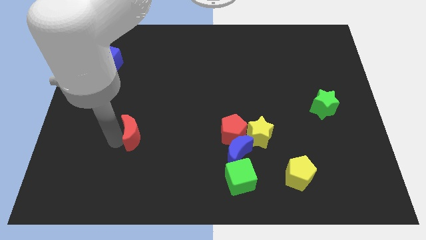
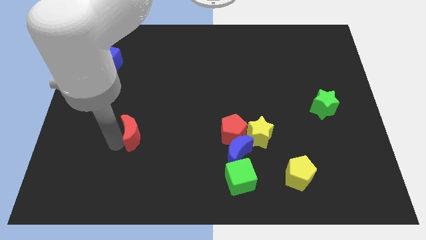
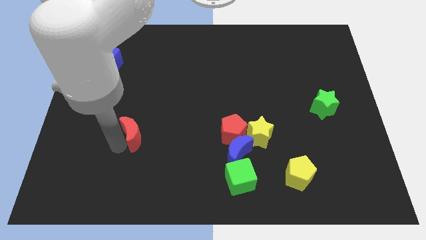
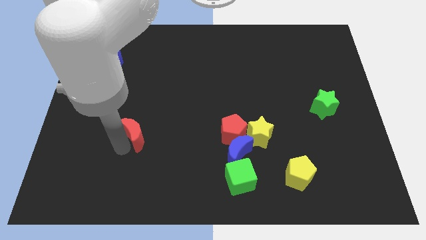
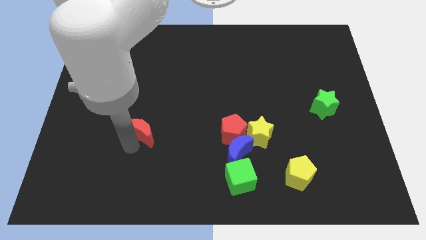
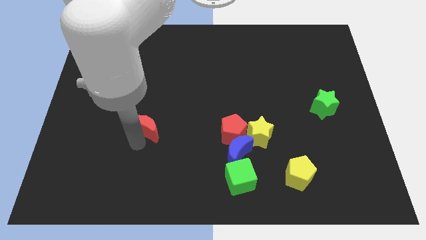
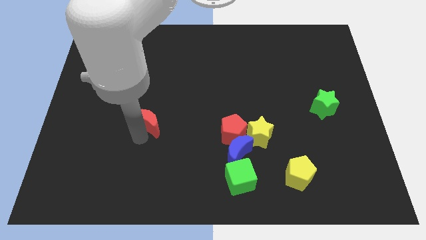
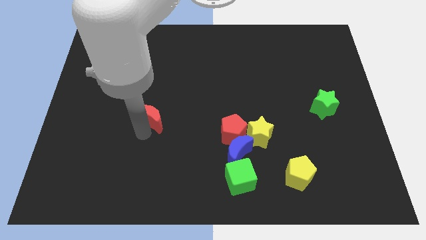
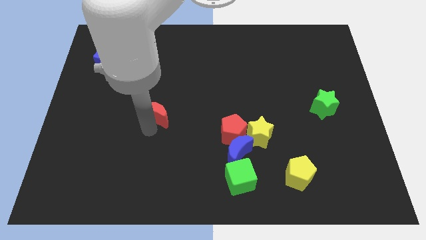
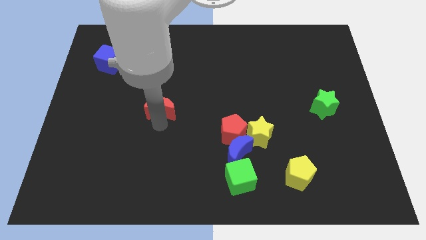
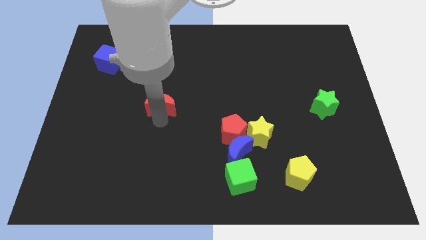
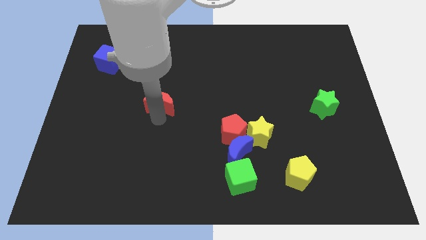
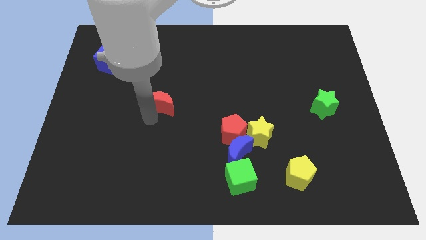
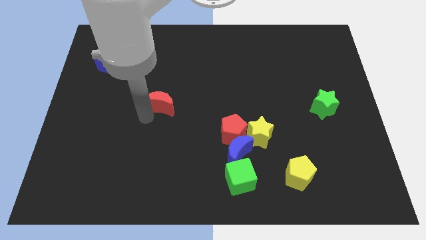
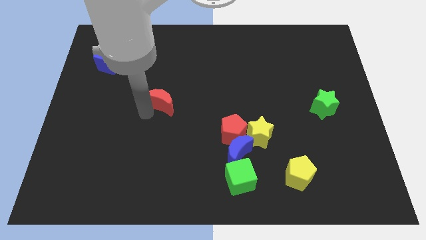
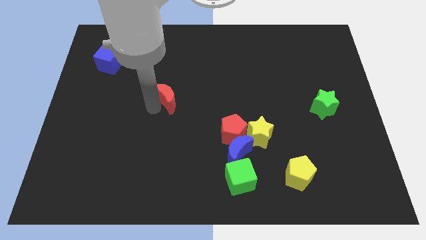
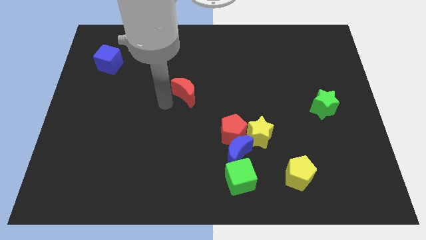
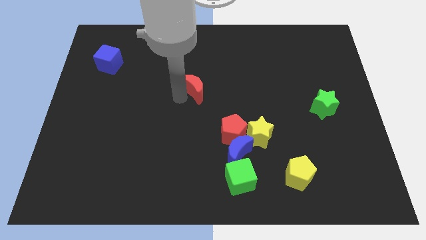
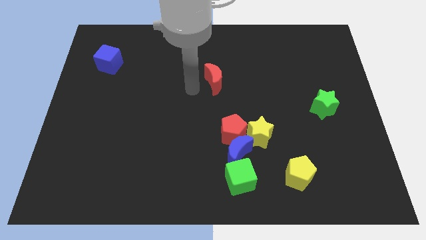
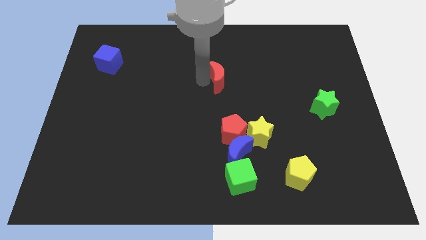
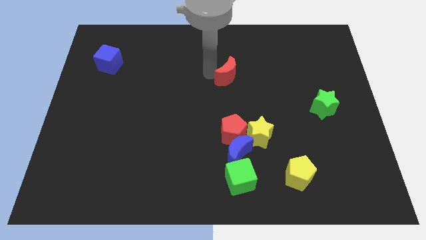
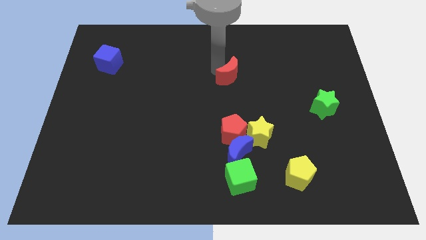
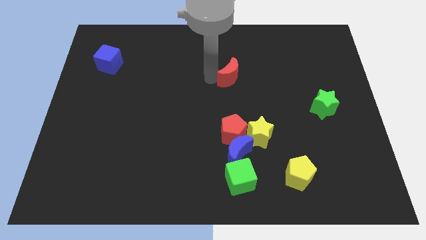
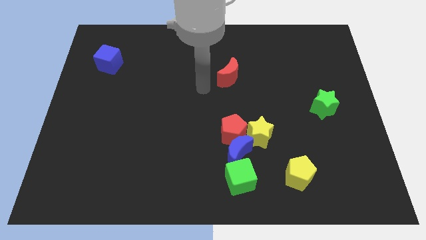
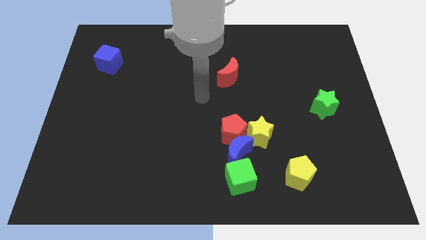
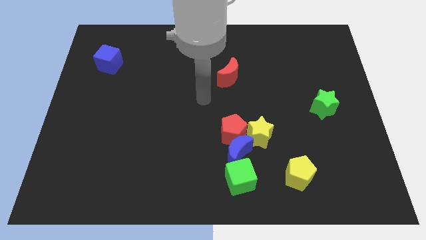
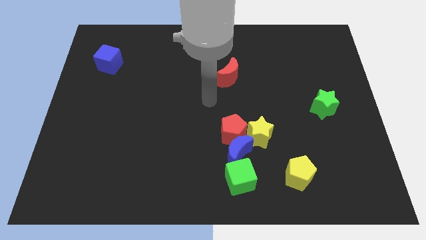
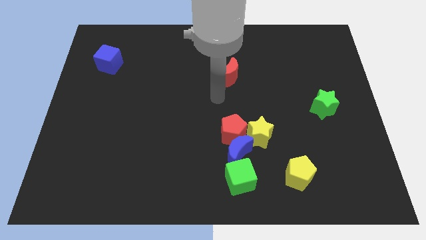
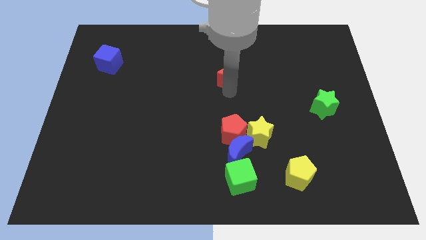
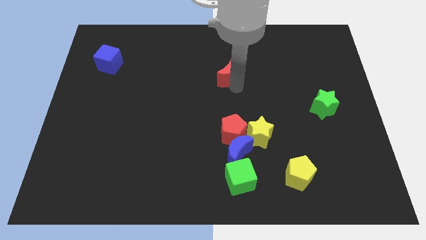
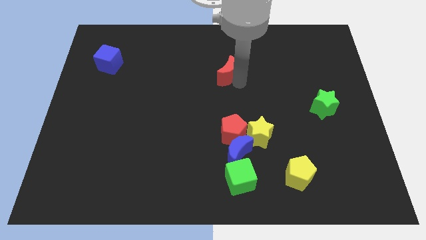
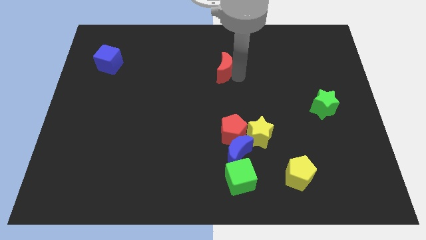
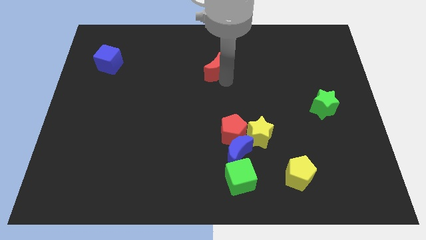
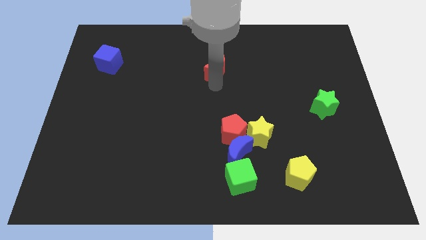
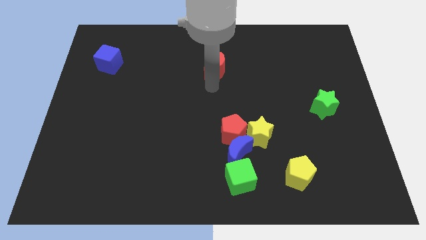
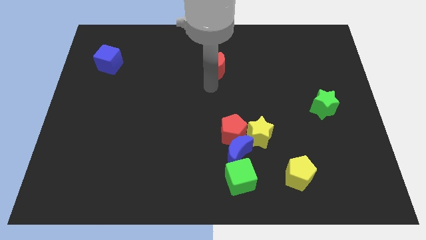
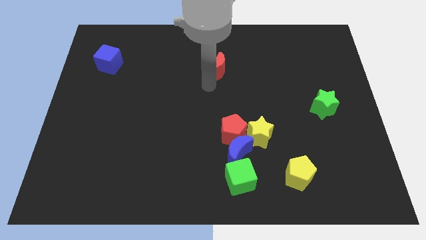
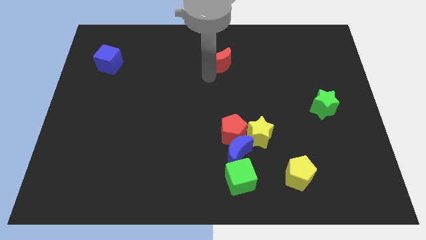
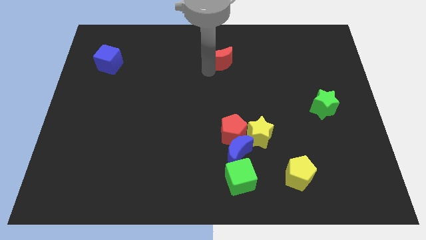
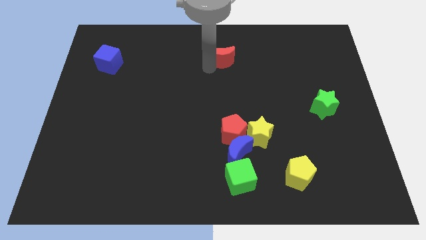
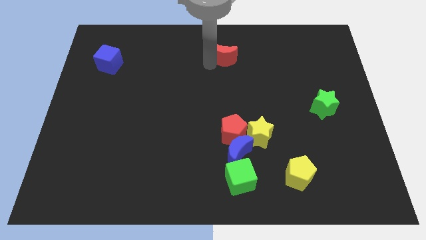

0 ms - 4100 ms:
push red moon to the right of blue cube

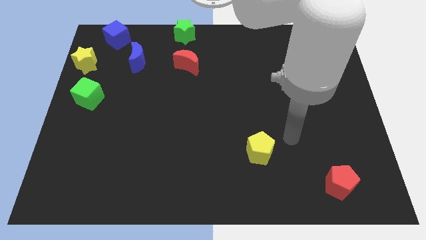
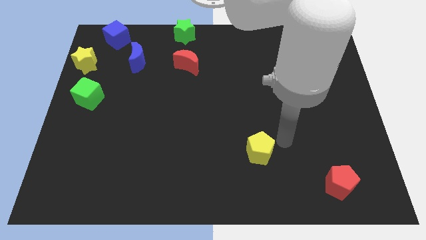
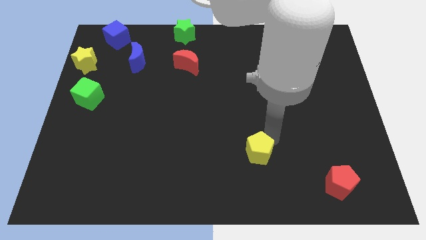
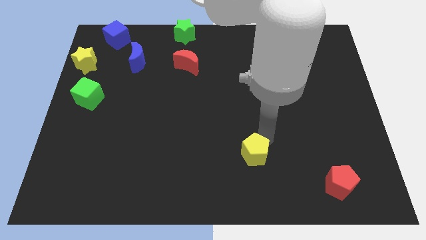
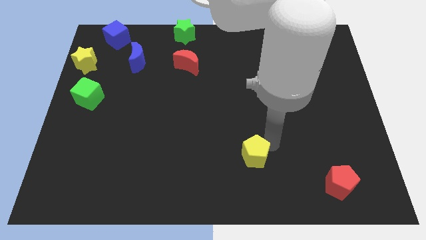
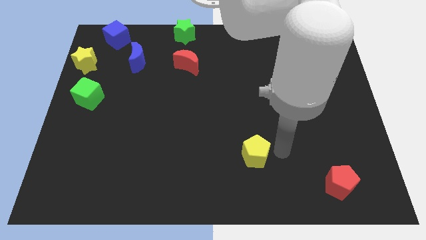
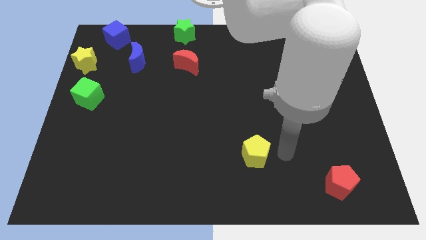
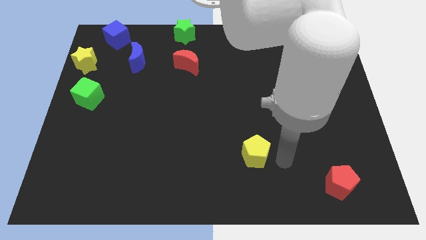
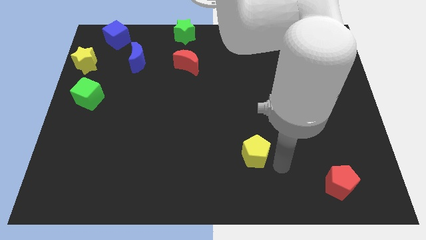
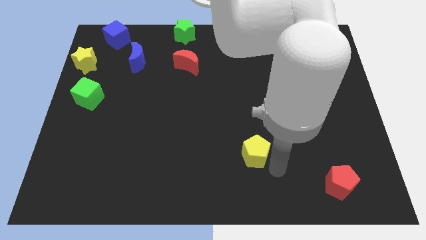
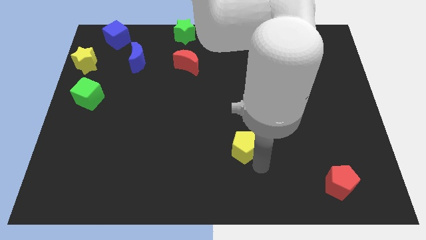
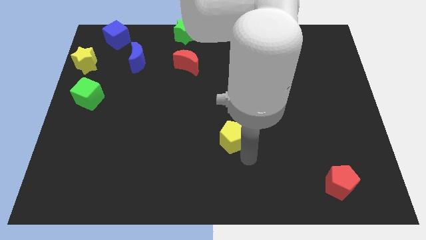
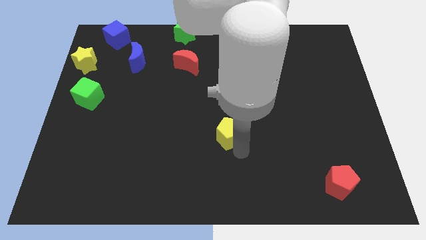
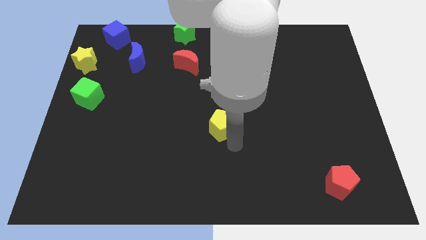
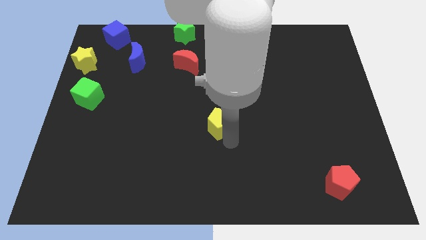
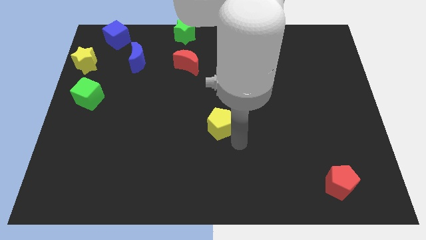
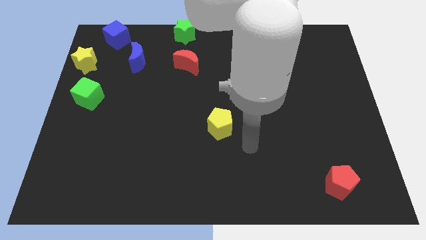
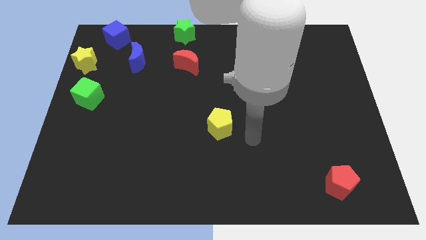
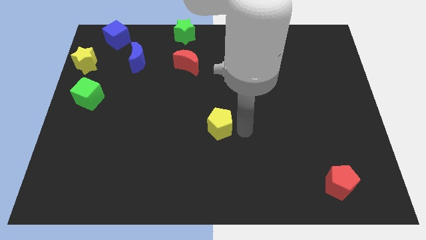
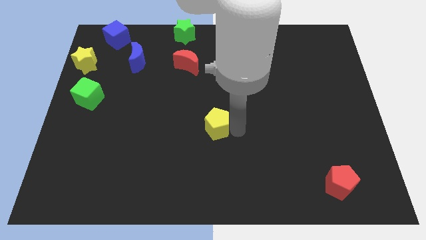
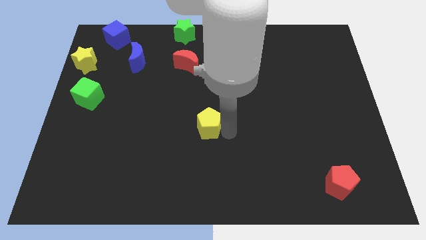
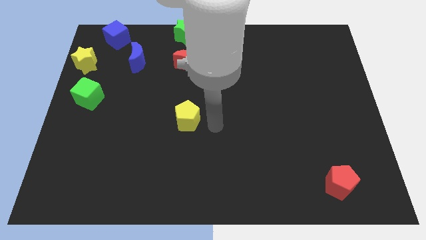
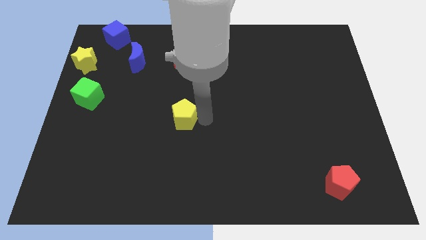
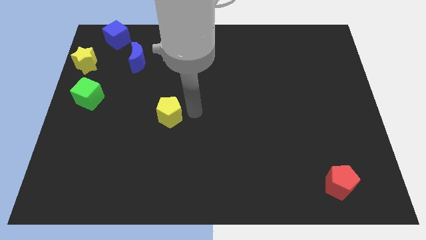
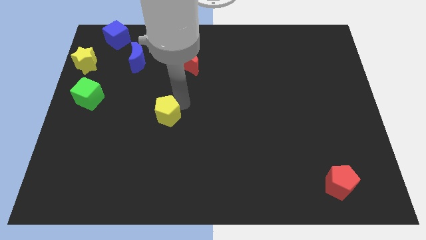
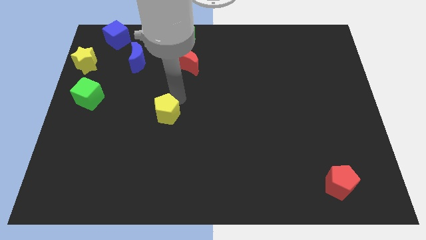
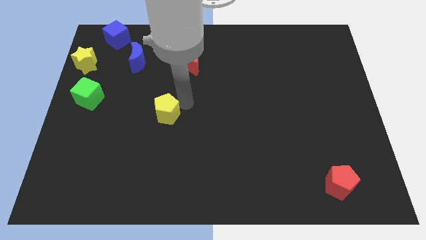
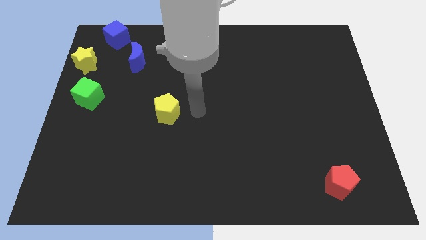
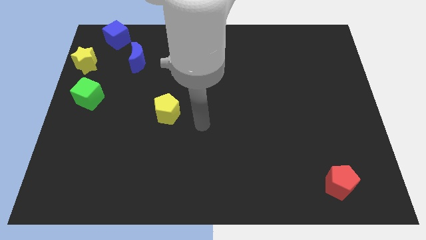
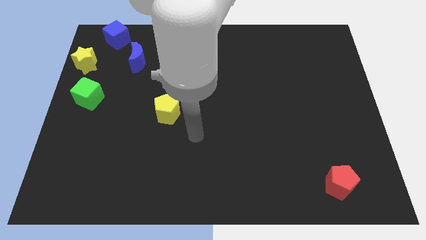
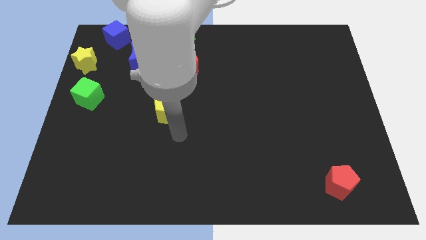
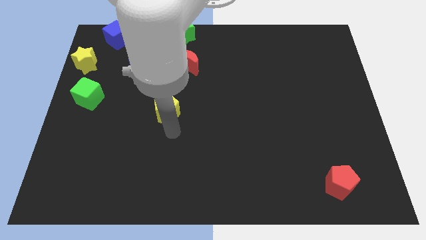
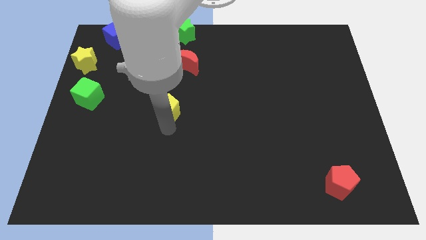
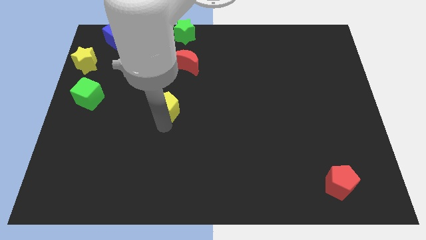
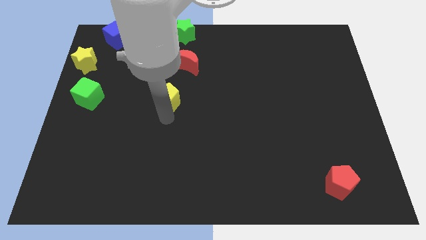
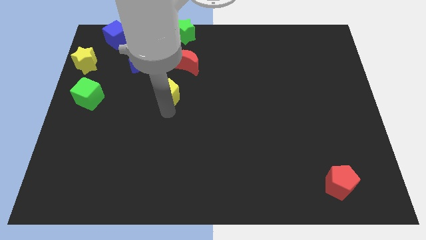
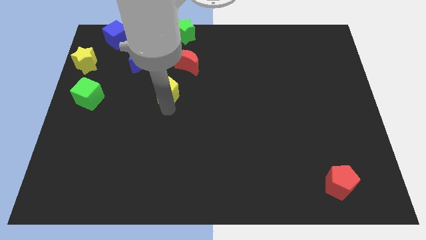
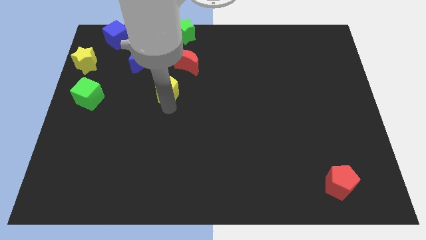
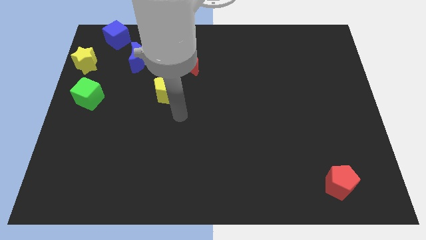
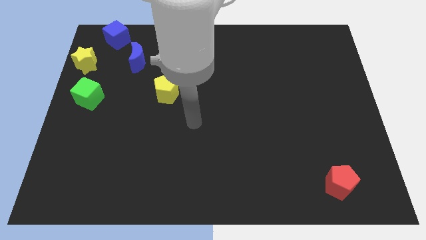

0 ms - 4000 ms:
move yellow pentagon below red moon

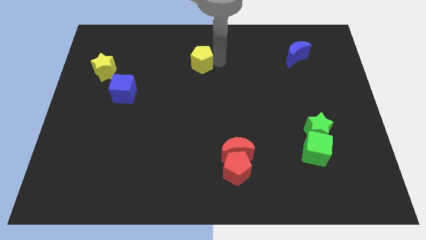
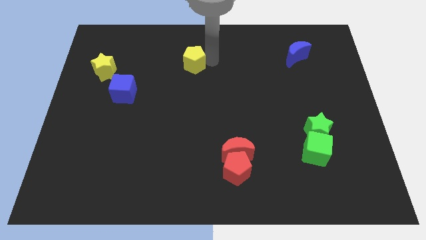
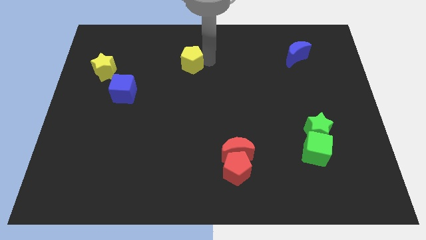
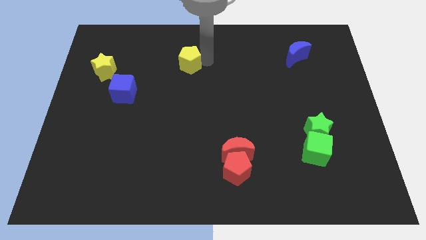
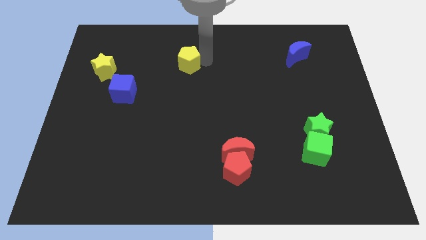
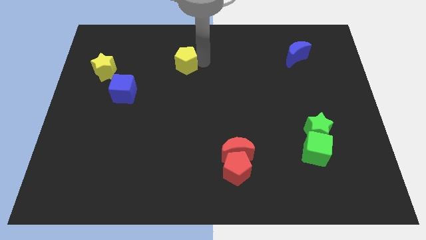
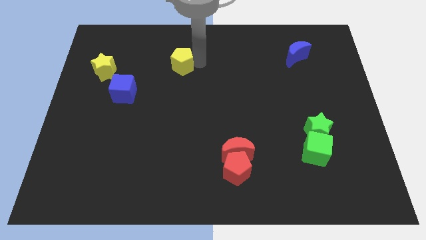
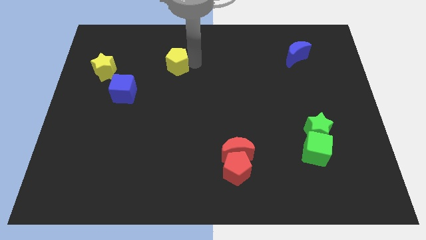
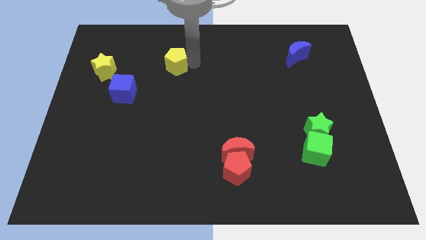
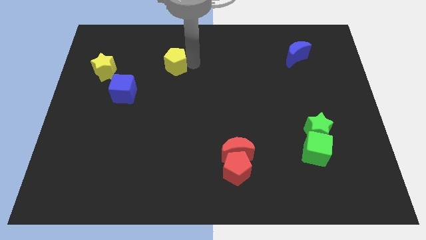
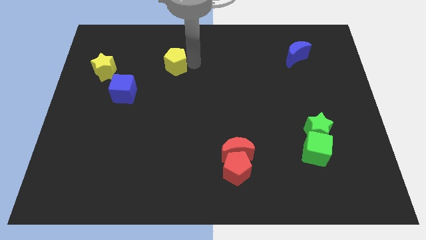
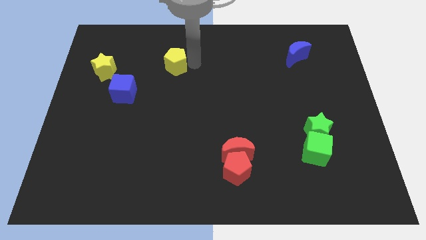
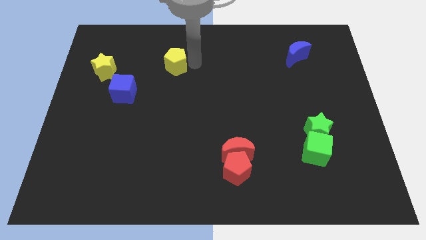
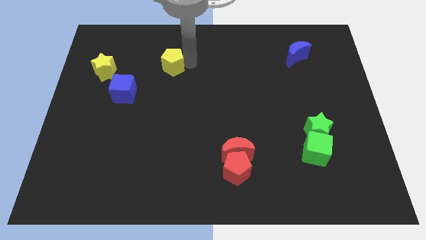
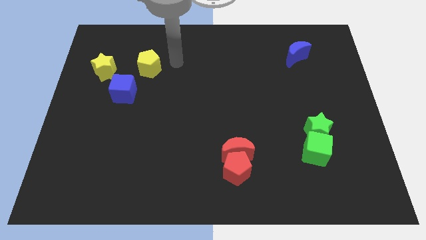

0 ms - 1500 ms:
move yellow pentagon towards yellow star
